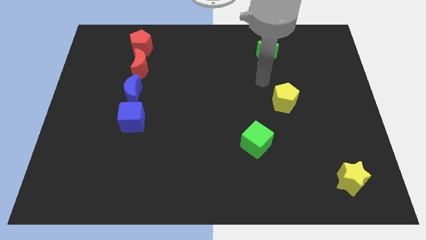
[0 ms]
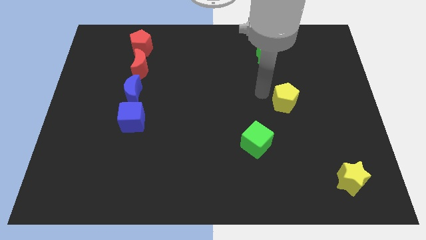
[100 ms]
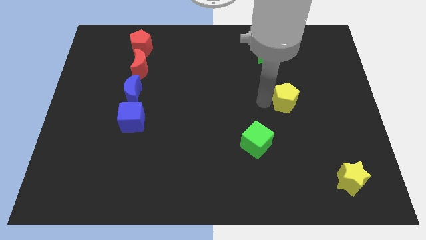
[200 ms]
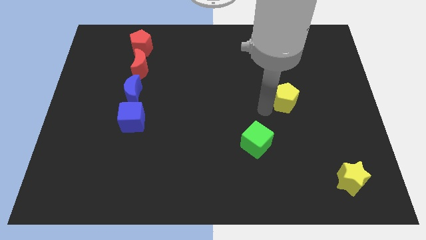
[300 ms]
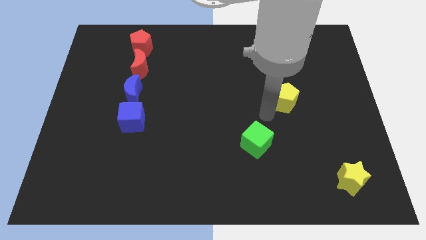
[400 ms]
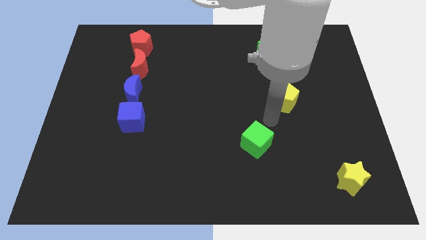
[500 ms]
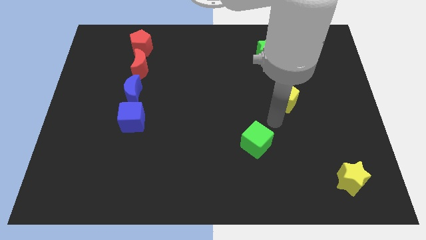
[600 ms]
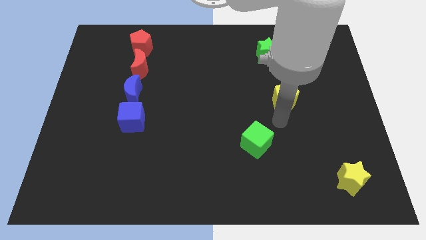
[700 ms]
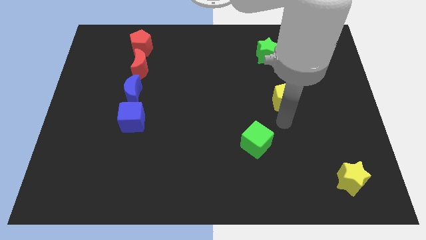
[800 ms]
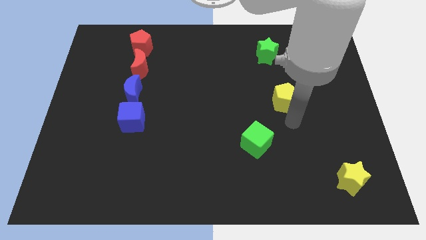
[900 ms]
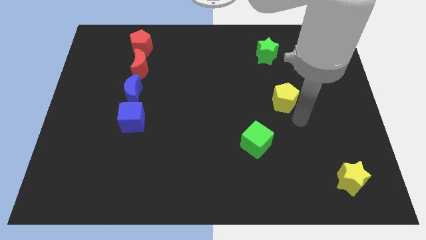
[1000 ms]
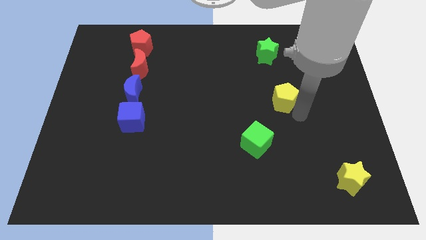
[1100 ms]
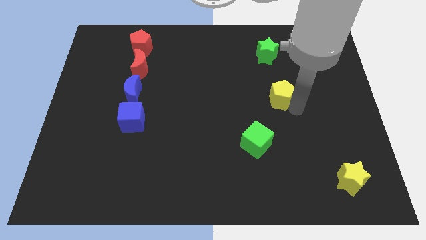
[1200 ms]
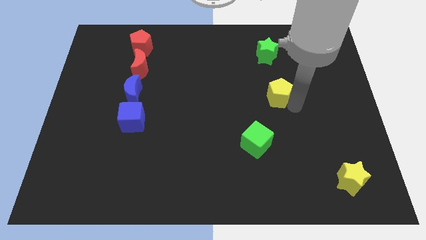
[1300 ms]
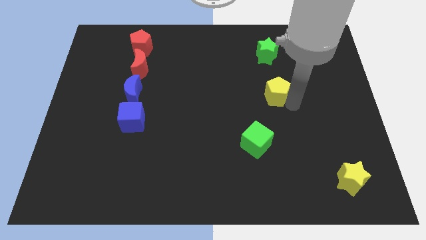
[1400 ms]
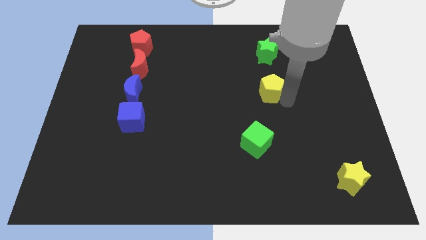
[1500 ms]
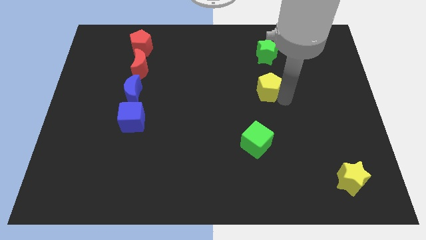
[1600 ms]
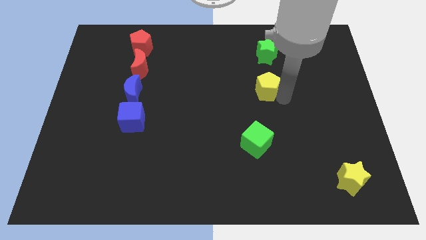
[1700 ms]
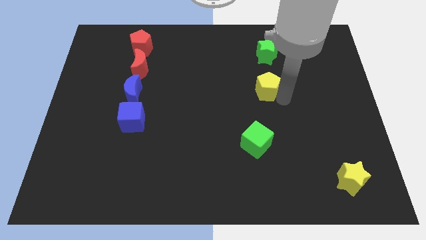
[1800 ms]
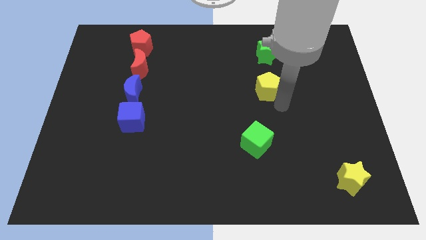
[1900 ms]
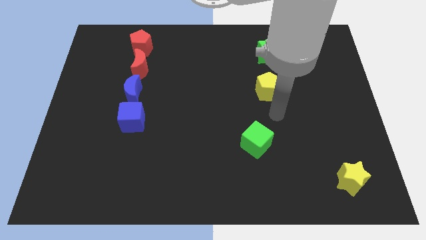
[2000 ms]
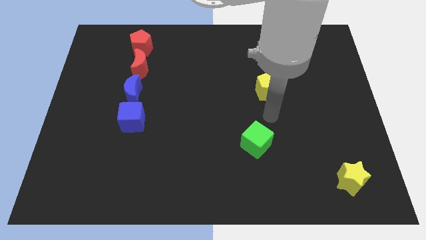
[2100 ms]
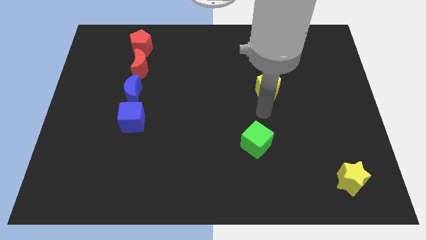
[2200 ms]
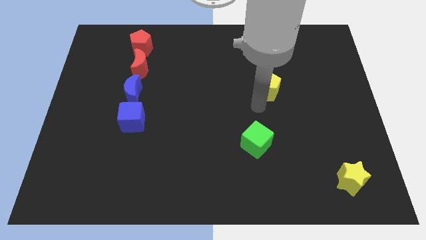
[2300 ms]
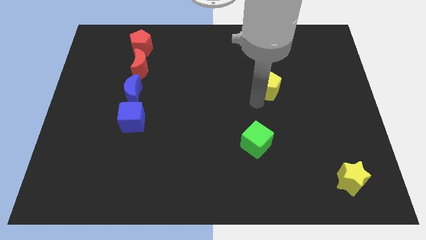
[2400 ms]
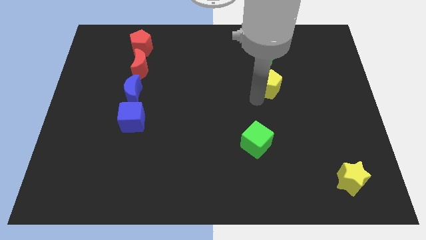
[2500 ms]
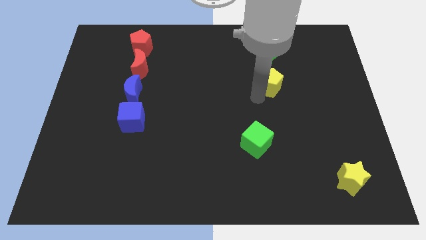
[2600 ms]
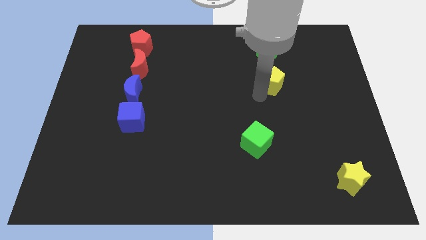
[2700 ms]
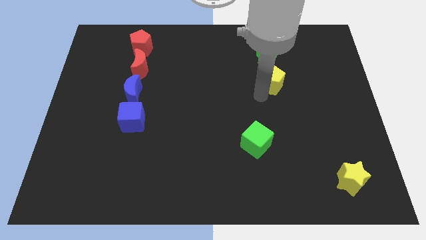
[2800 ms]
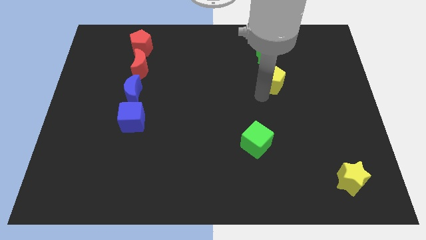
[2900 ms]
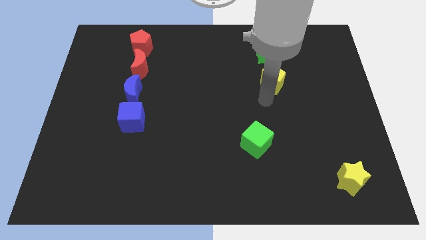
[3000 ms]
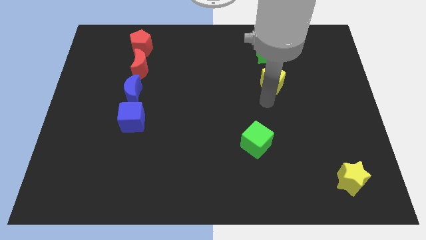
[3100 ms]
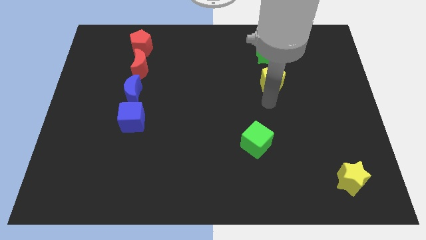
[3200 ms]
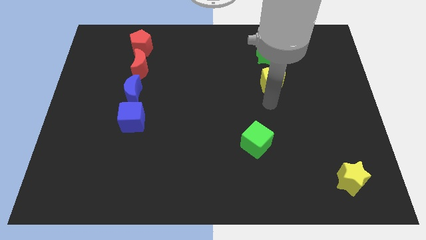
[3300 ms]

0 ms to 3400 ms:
place the yellow pentagon below the green star

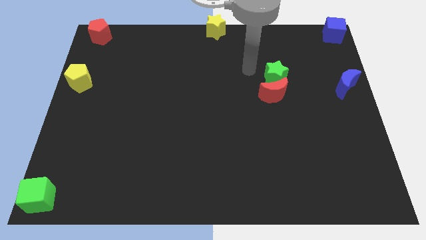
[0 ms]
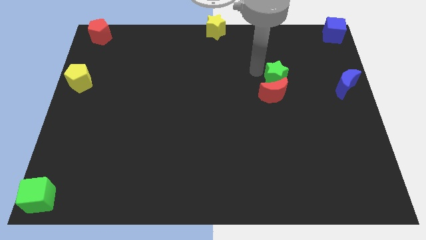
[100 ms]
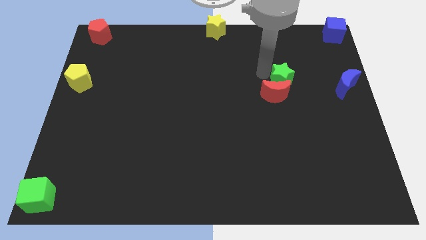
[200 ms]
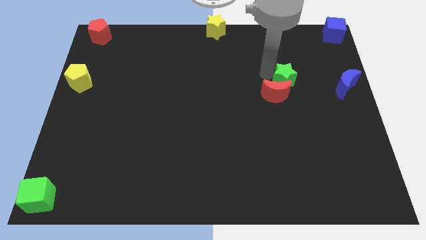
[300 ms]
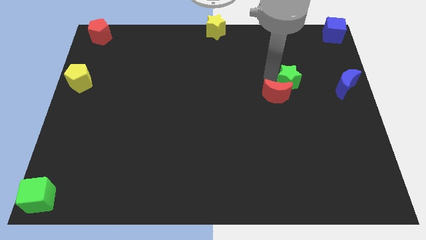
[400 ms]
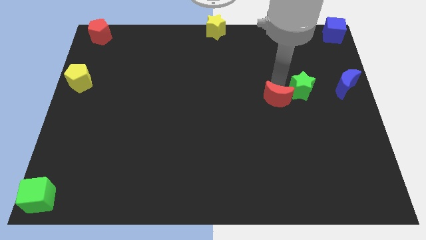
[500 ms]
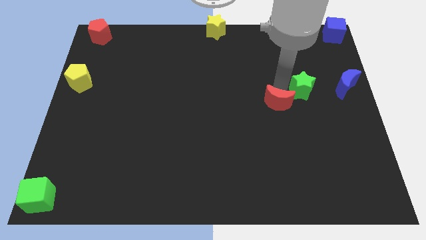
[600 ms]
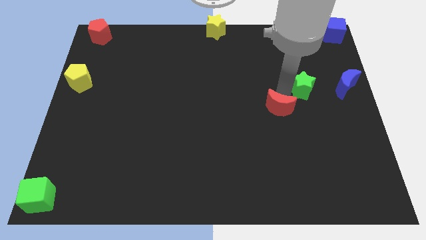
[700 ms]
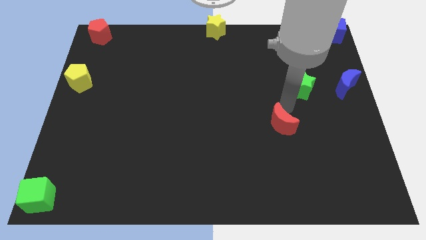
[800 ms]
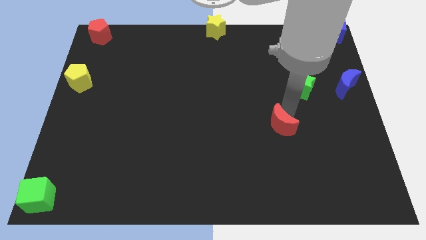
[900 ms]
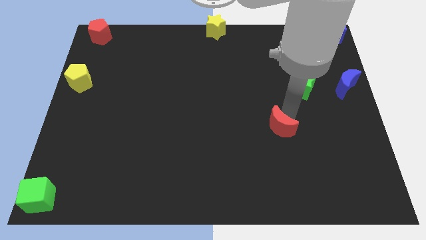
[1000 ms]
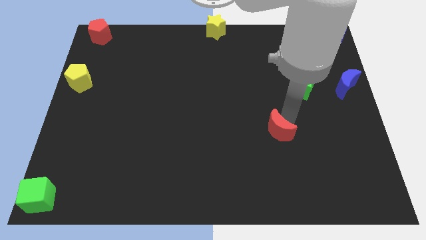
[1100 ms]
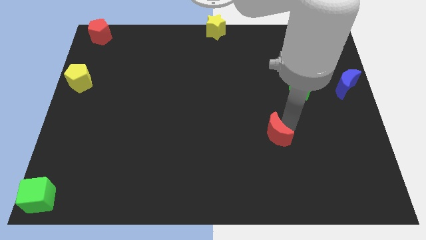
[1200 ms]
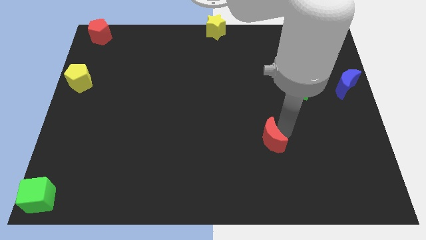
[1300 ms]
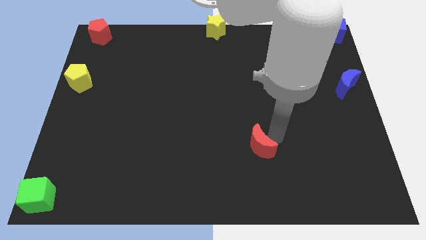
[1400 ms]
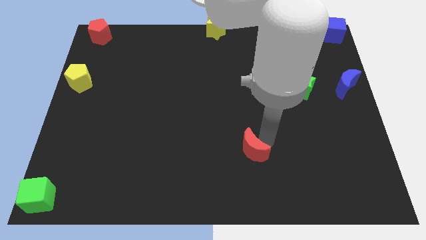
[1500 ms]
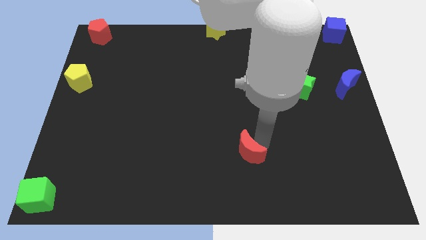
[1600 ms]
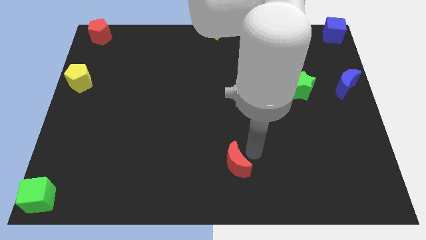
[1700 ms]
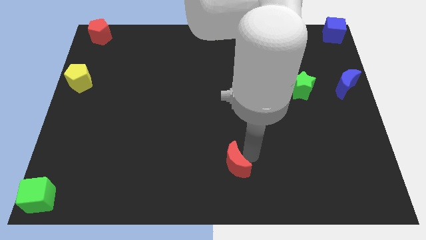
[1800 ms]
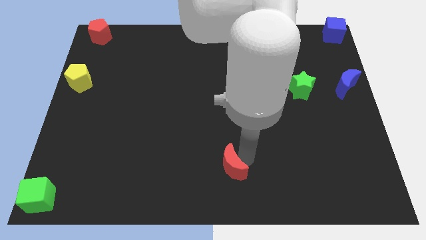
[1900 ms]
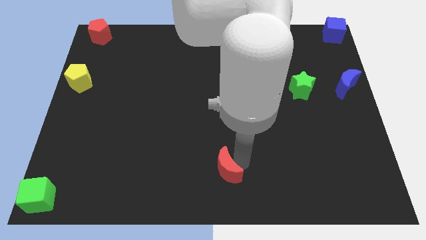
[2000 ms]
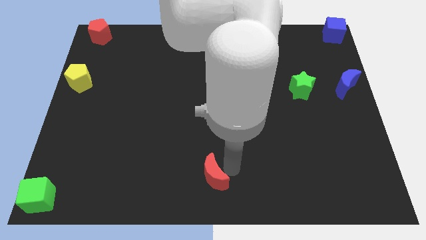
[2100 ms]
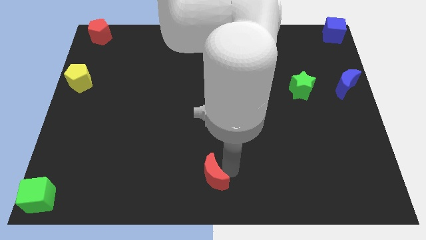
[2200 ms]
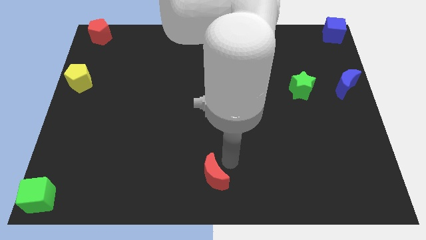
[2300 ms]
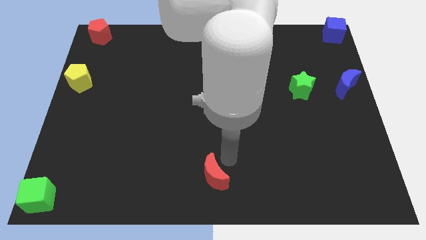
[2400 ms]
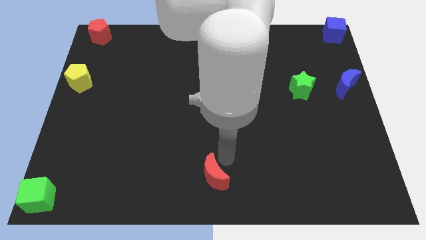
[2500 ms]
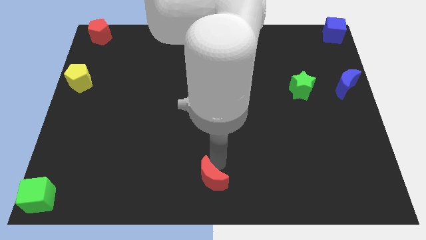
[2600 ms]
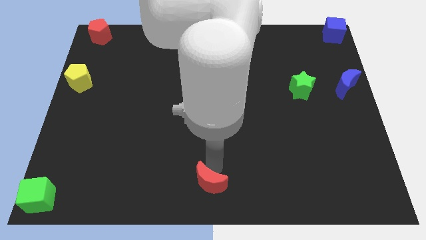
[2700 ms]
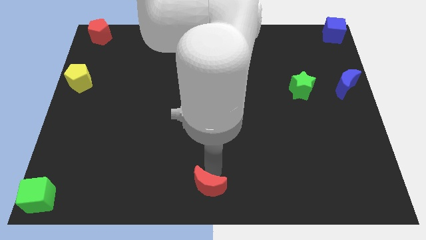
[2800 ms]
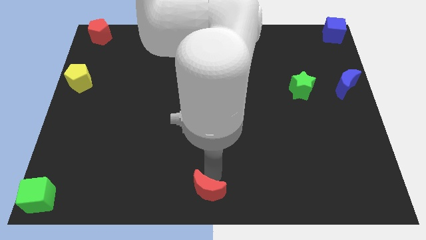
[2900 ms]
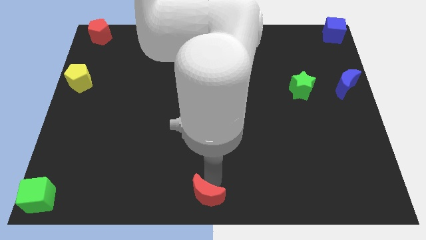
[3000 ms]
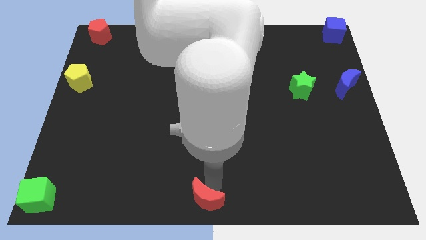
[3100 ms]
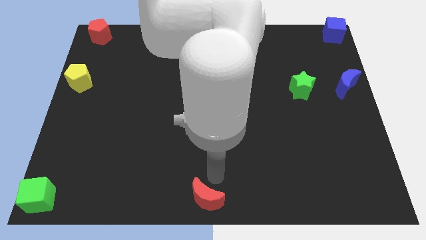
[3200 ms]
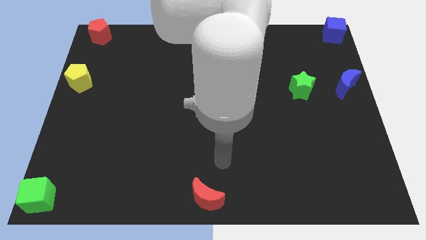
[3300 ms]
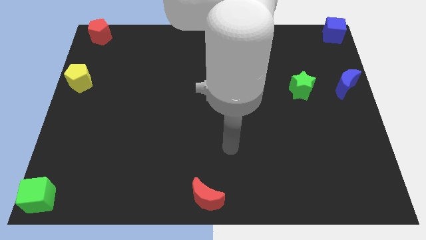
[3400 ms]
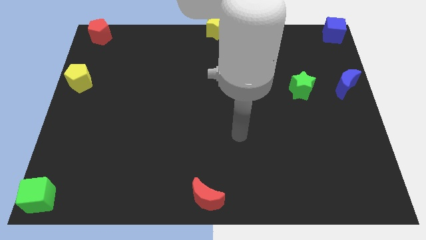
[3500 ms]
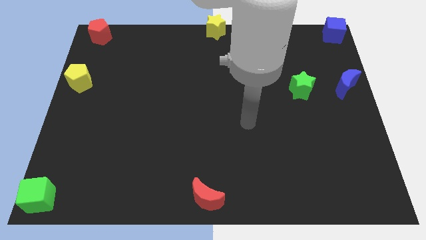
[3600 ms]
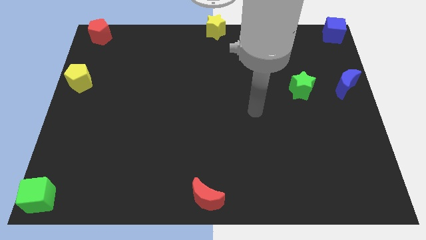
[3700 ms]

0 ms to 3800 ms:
move the red crecent to the bottom center

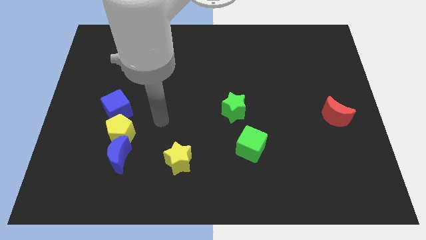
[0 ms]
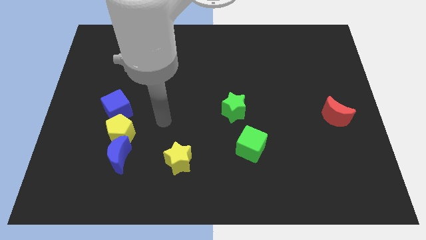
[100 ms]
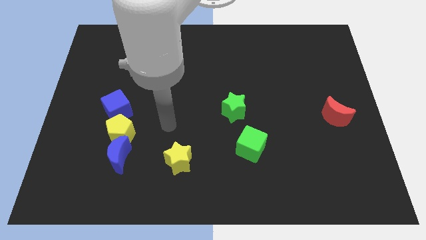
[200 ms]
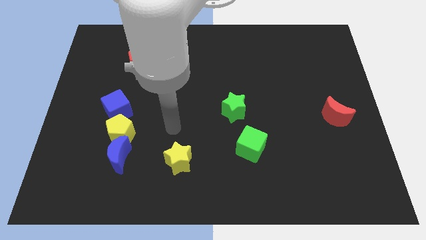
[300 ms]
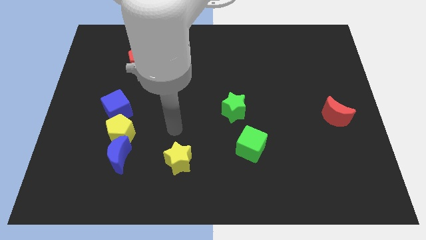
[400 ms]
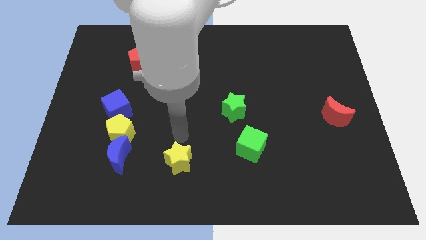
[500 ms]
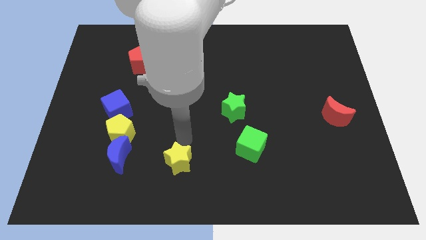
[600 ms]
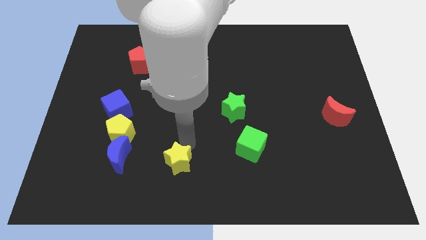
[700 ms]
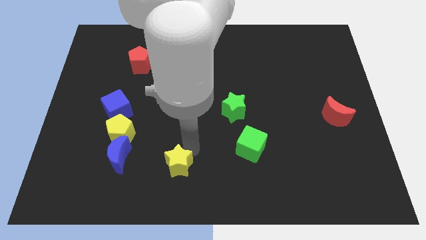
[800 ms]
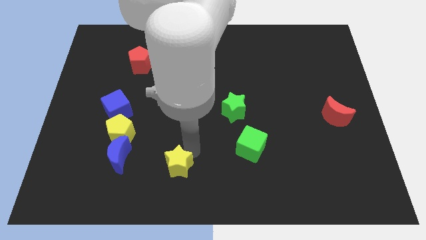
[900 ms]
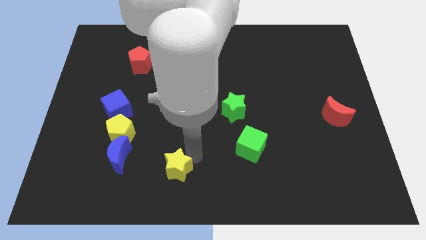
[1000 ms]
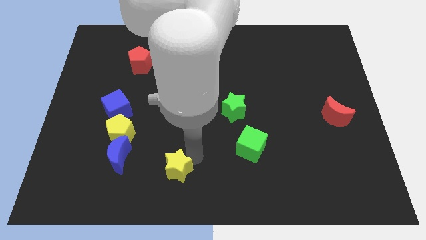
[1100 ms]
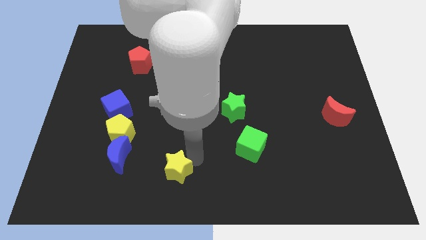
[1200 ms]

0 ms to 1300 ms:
move the yellow star slightly to the left

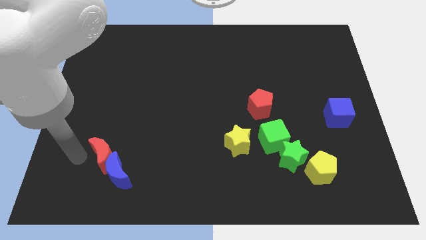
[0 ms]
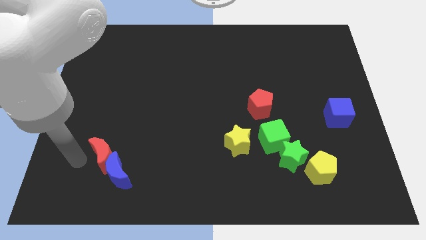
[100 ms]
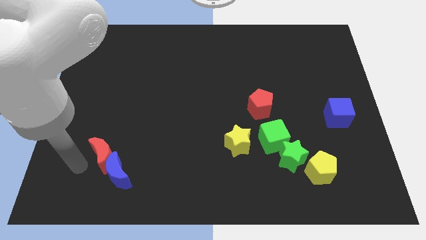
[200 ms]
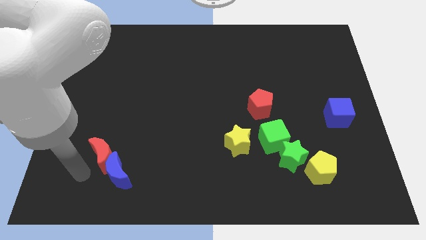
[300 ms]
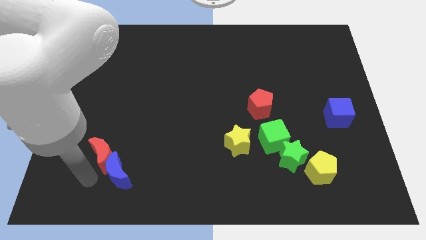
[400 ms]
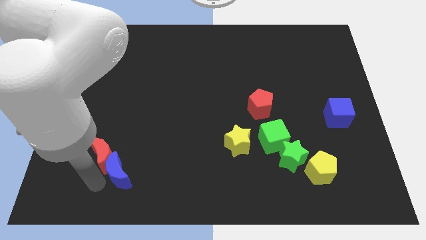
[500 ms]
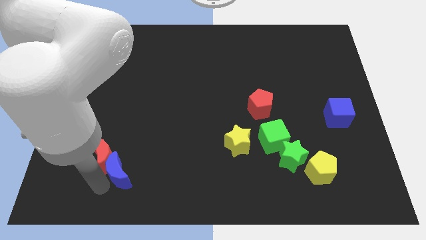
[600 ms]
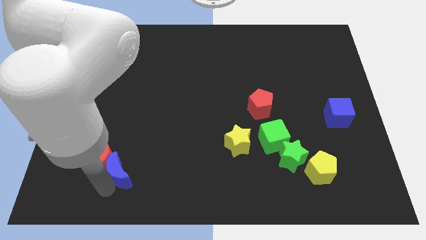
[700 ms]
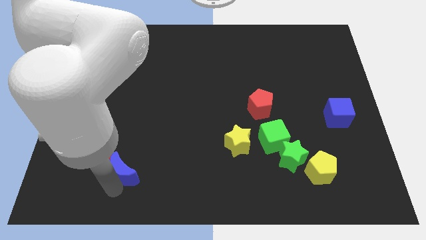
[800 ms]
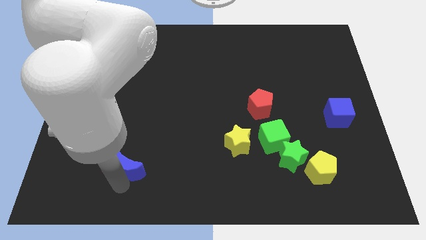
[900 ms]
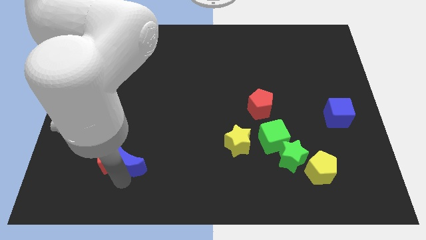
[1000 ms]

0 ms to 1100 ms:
move the blue moon slightly up
